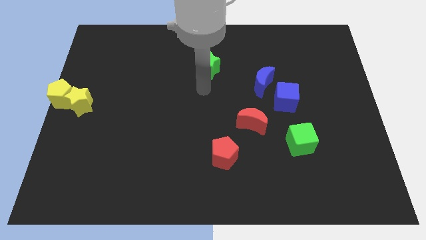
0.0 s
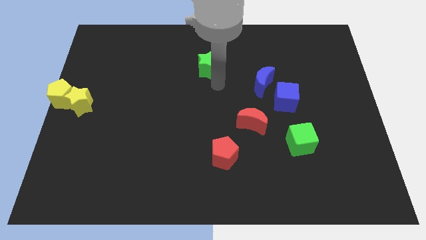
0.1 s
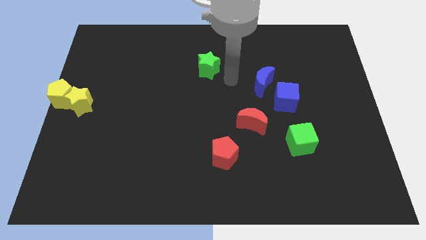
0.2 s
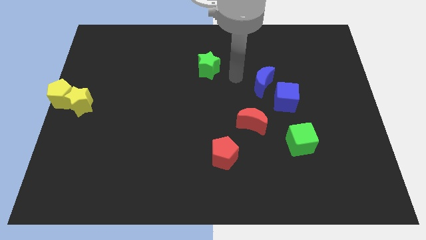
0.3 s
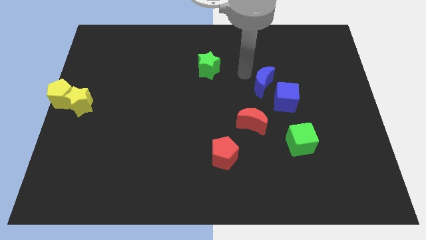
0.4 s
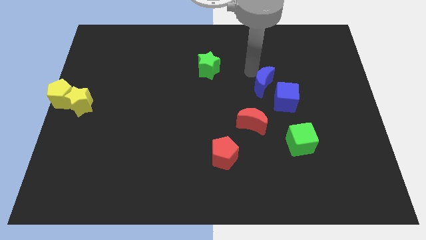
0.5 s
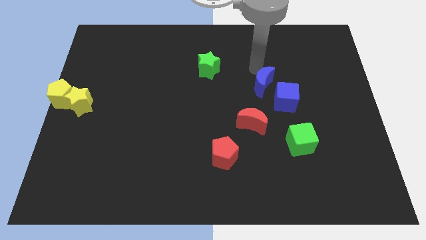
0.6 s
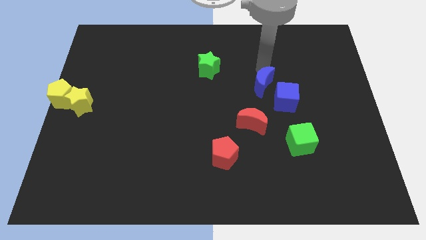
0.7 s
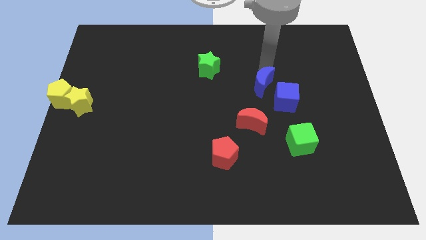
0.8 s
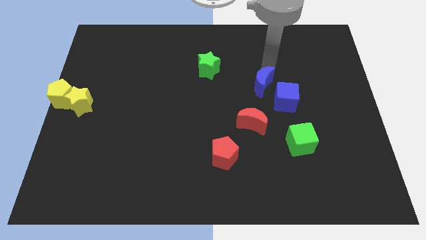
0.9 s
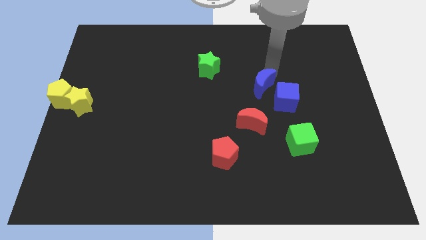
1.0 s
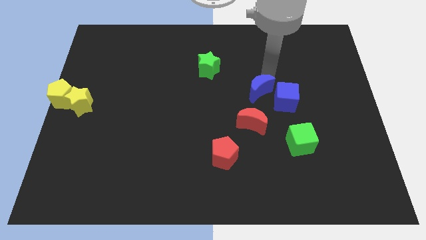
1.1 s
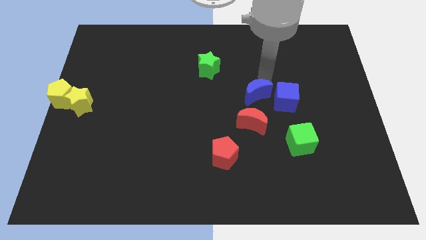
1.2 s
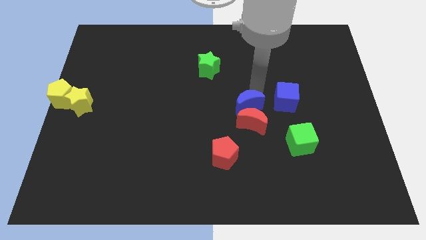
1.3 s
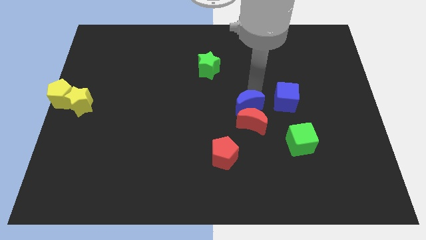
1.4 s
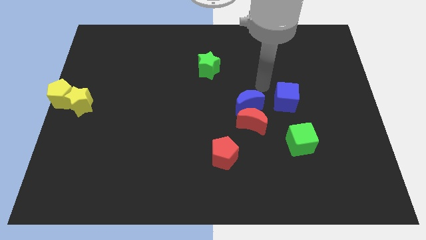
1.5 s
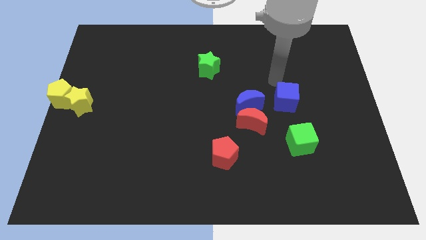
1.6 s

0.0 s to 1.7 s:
push the blue crescent to the top of the red crescent

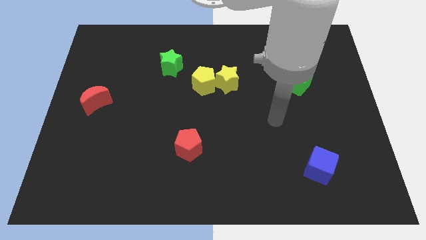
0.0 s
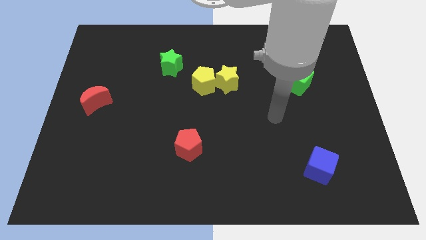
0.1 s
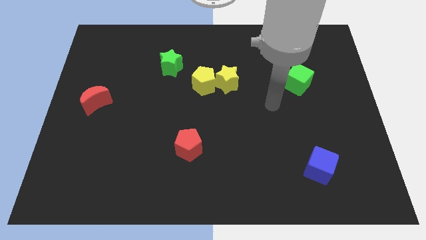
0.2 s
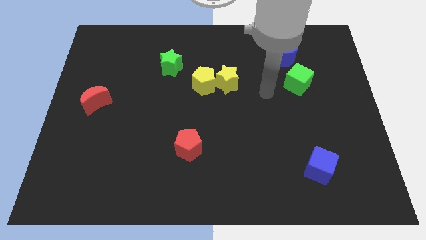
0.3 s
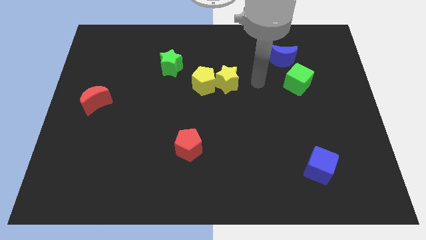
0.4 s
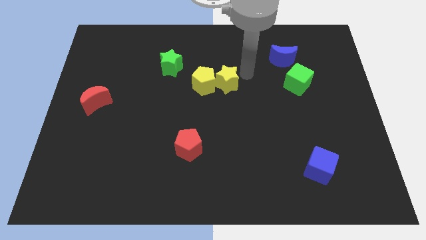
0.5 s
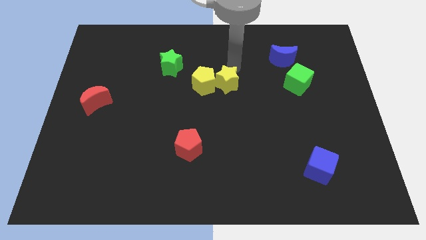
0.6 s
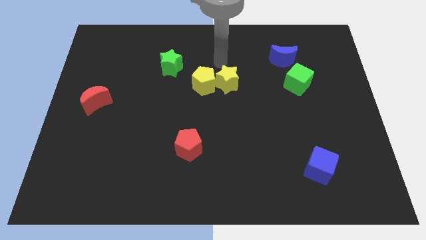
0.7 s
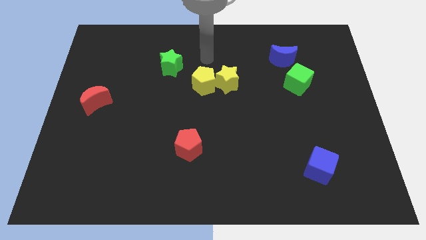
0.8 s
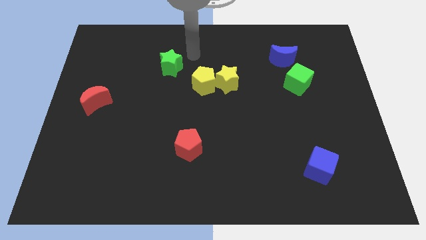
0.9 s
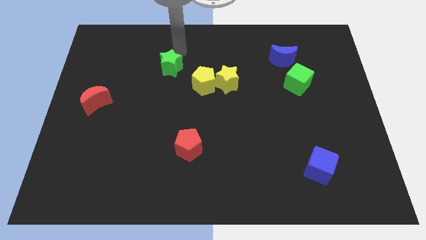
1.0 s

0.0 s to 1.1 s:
place arm on the top of green star

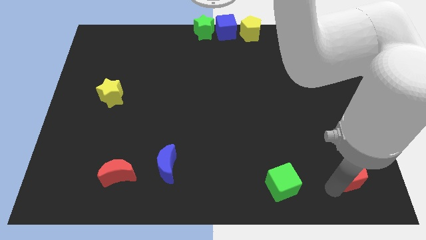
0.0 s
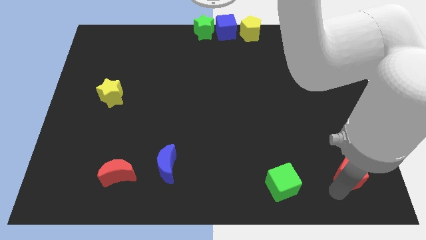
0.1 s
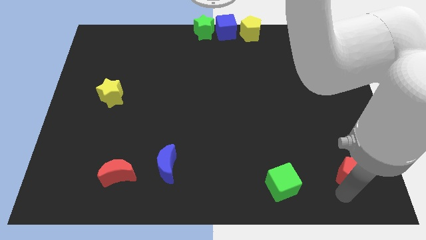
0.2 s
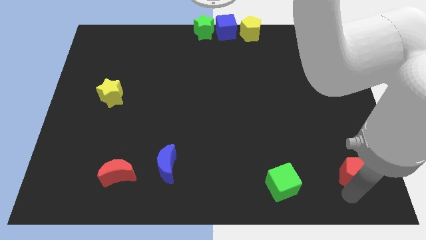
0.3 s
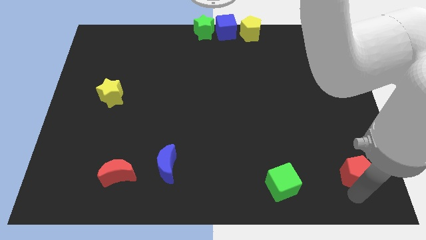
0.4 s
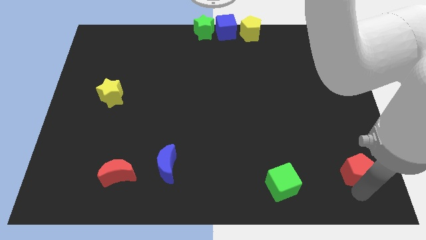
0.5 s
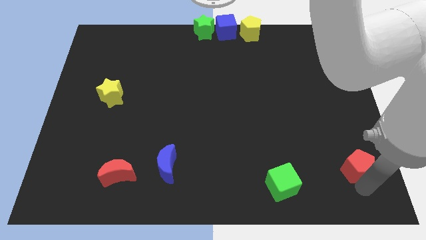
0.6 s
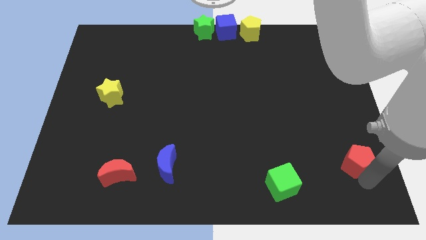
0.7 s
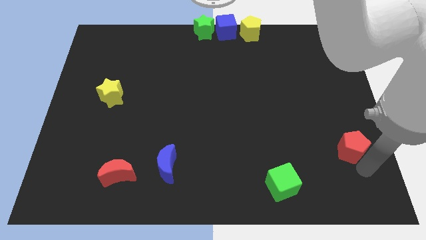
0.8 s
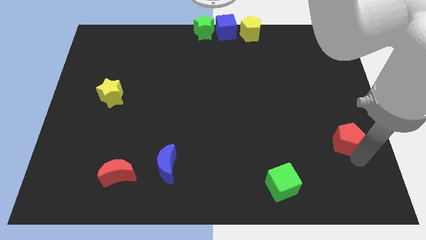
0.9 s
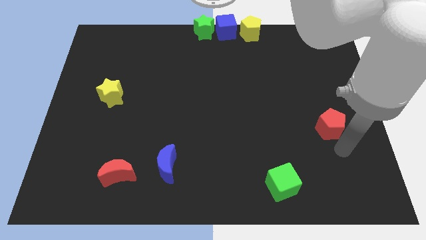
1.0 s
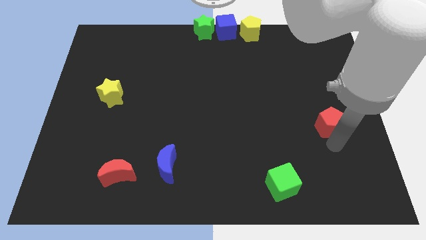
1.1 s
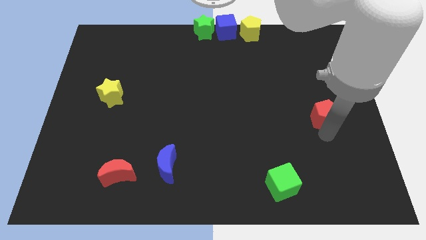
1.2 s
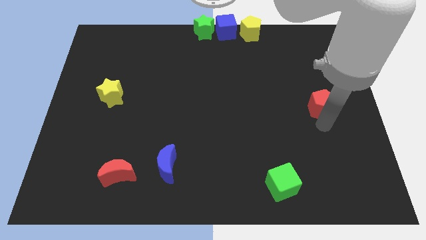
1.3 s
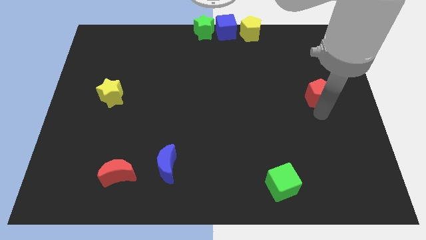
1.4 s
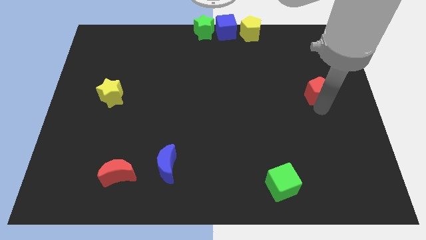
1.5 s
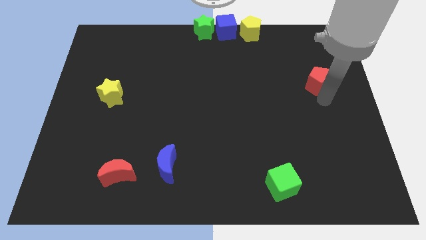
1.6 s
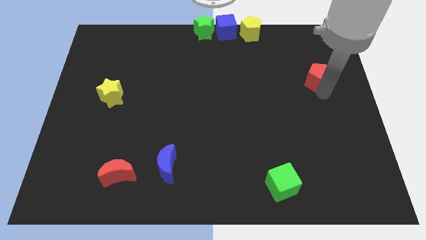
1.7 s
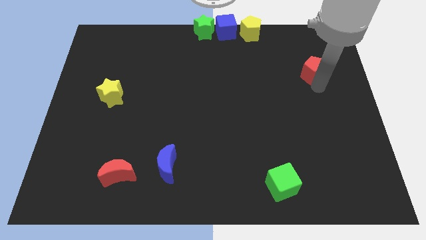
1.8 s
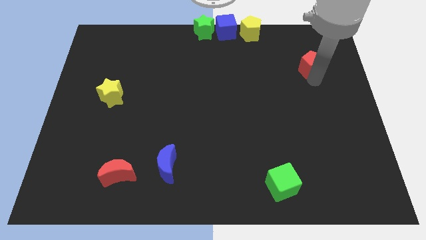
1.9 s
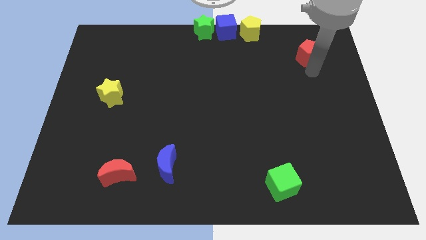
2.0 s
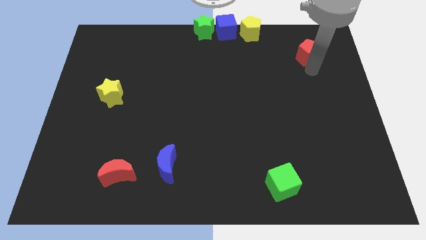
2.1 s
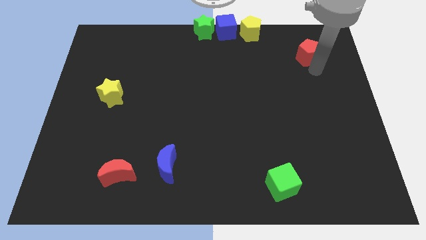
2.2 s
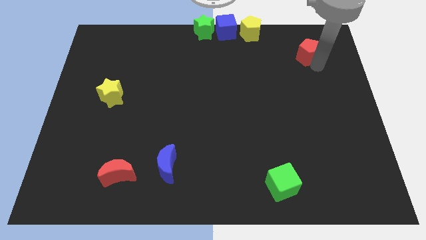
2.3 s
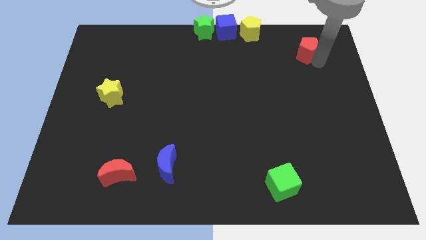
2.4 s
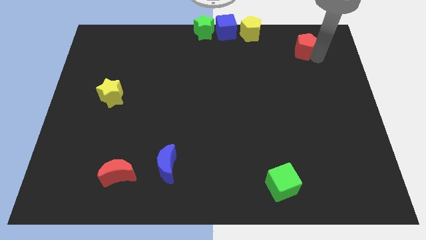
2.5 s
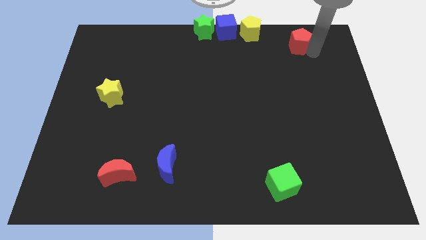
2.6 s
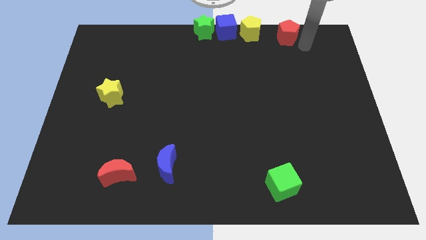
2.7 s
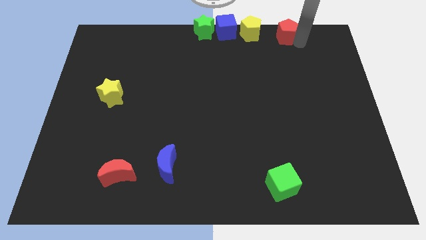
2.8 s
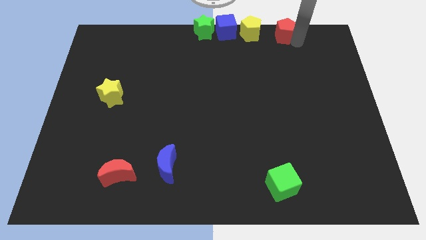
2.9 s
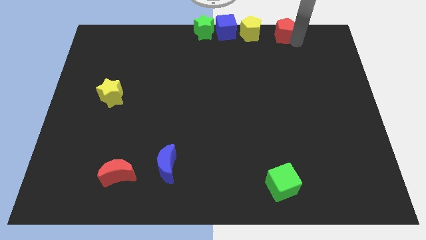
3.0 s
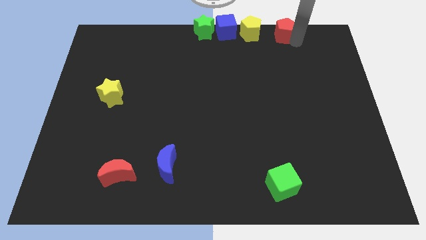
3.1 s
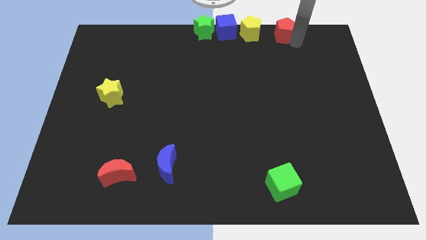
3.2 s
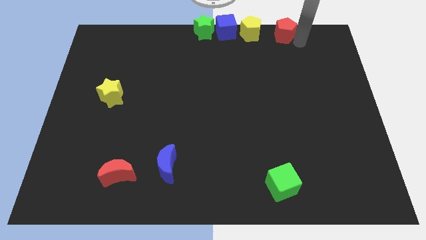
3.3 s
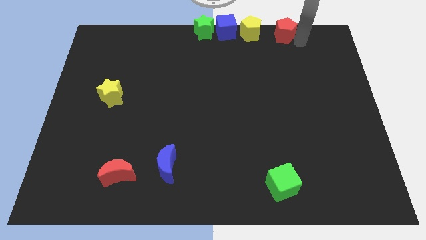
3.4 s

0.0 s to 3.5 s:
place red pentagon on right side to yellow pentagon

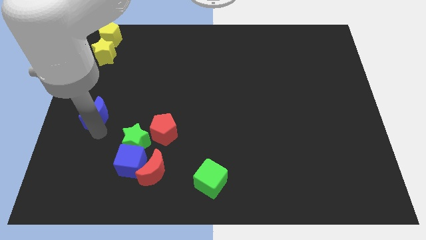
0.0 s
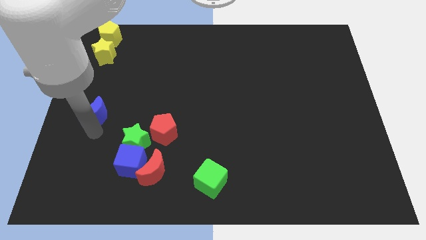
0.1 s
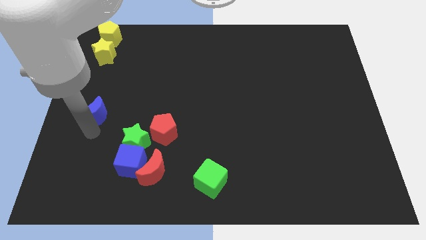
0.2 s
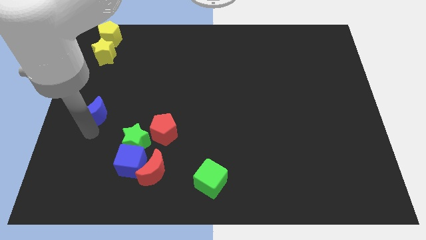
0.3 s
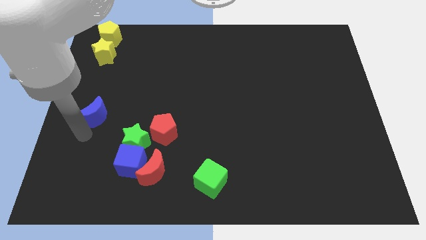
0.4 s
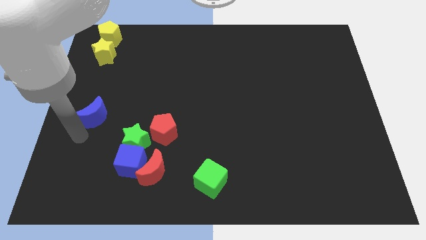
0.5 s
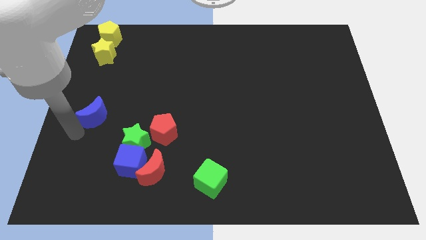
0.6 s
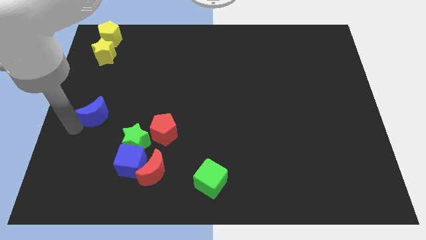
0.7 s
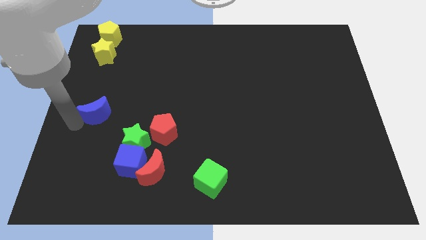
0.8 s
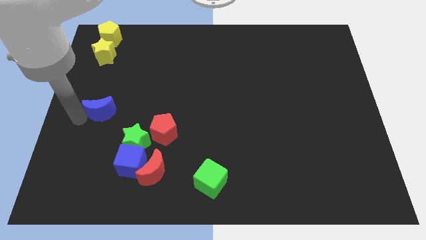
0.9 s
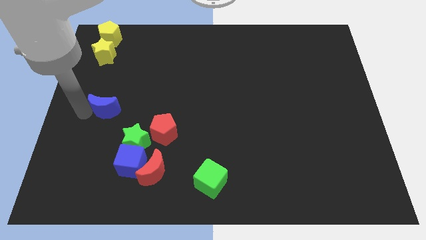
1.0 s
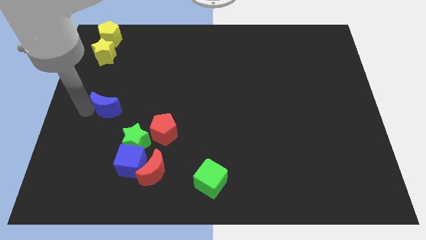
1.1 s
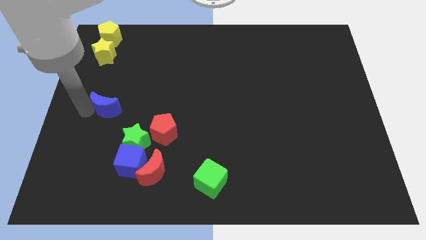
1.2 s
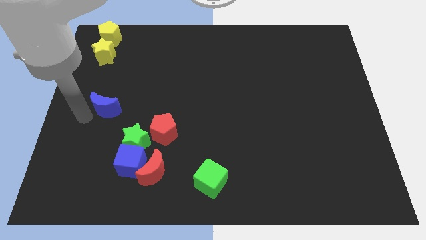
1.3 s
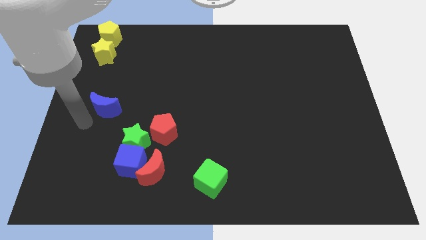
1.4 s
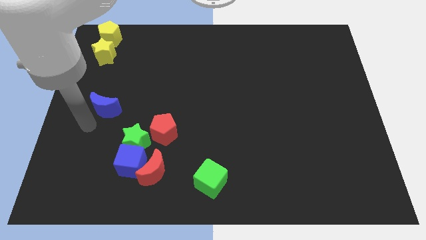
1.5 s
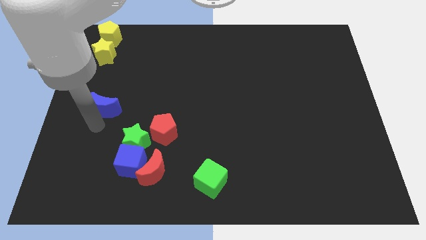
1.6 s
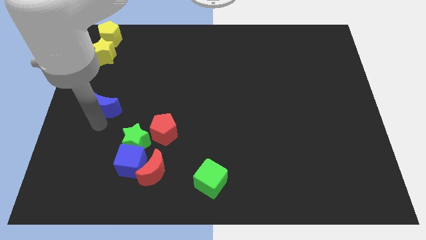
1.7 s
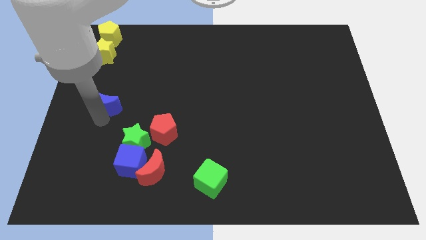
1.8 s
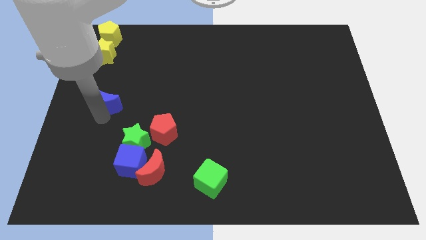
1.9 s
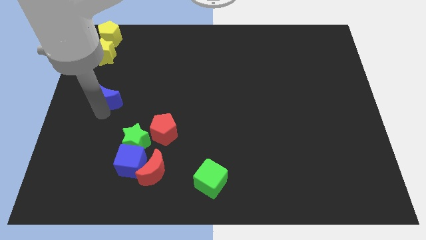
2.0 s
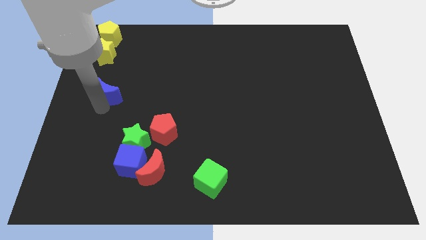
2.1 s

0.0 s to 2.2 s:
push the blue moon to the center left

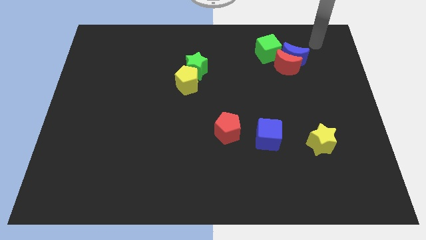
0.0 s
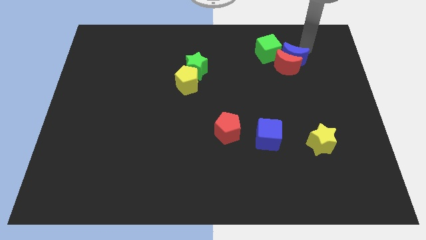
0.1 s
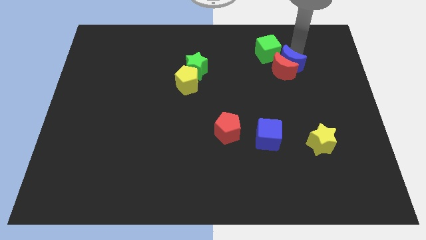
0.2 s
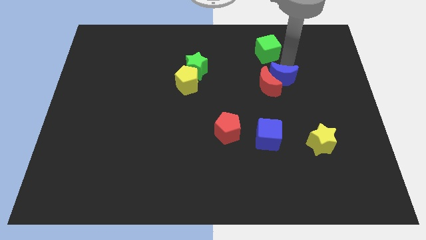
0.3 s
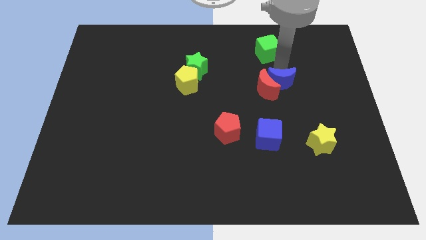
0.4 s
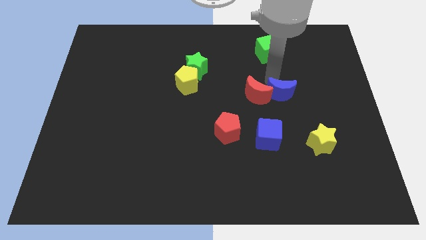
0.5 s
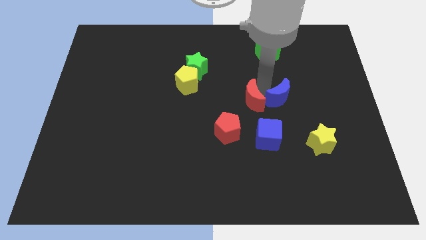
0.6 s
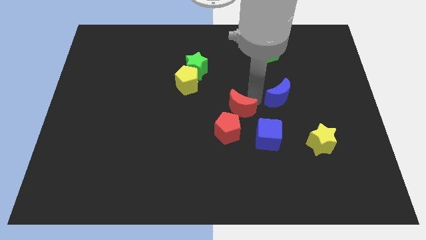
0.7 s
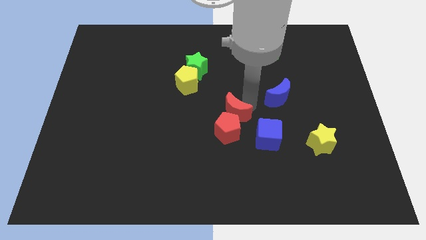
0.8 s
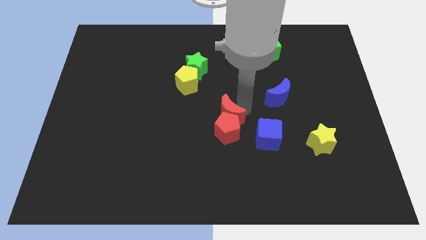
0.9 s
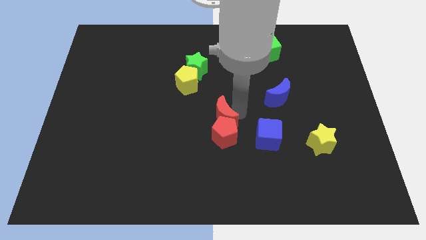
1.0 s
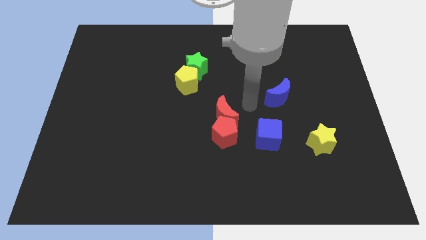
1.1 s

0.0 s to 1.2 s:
push blue crescent below green cube
